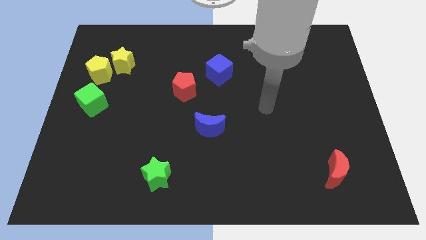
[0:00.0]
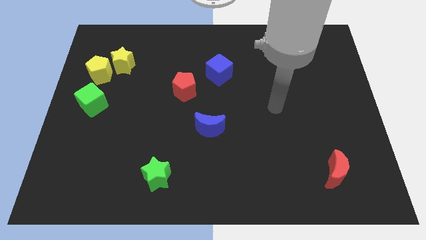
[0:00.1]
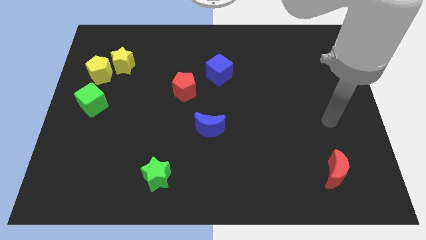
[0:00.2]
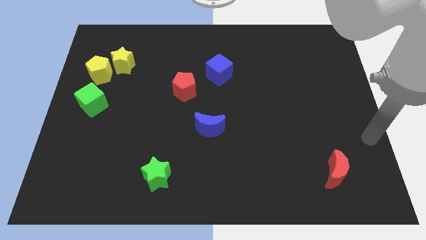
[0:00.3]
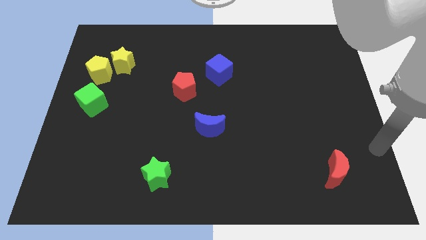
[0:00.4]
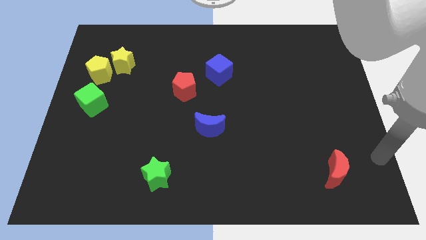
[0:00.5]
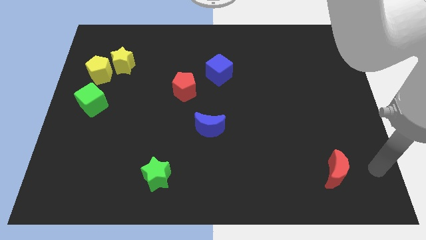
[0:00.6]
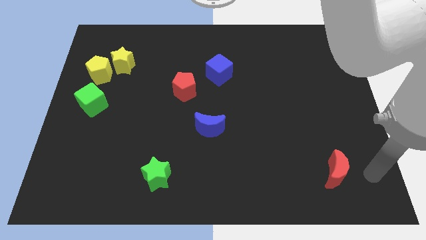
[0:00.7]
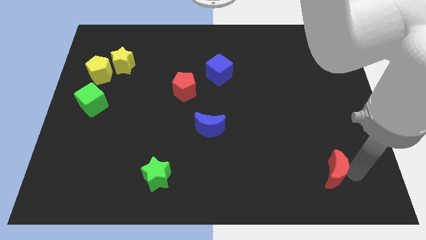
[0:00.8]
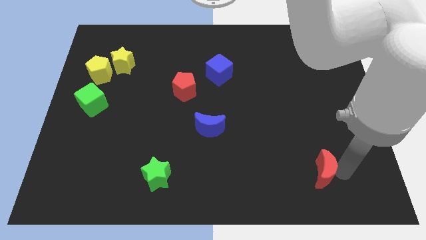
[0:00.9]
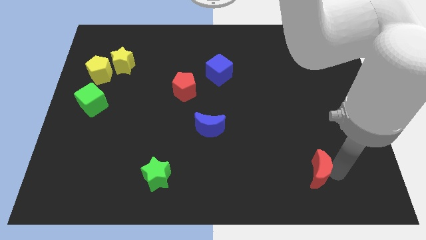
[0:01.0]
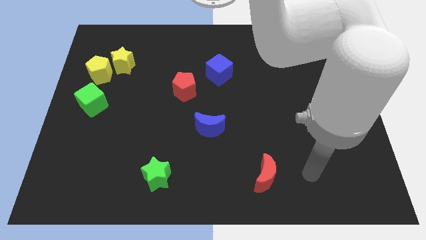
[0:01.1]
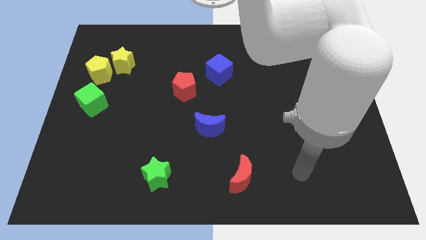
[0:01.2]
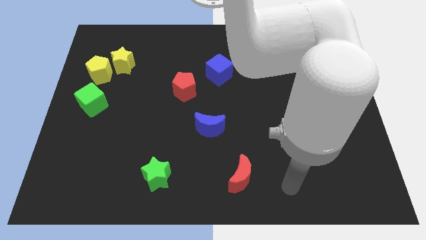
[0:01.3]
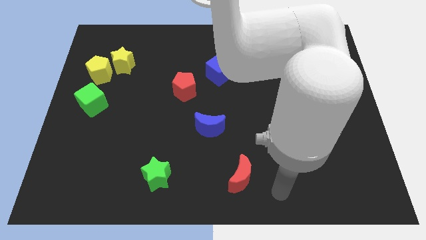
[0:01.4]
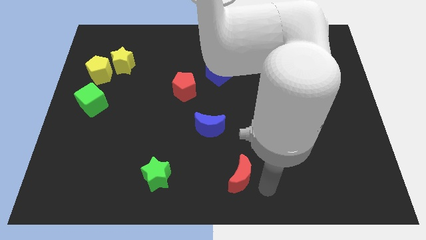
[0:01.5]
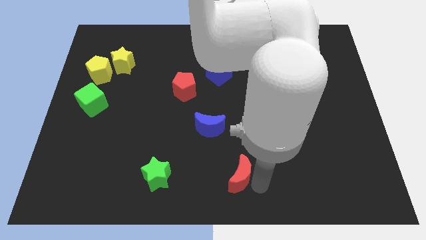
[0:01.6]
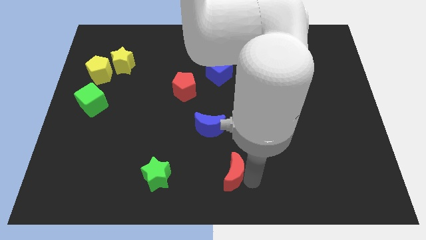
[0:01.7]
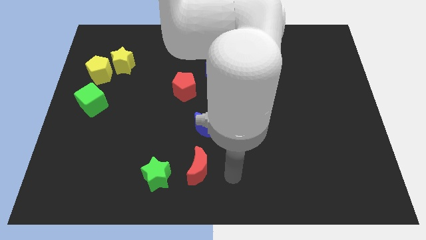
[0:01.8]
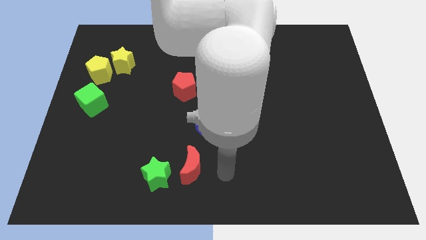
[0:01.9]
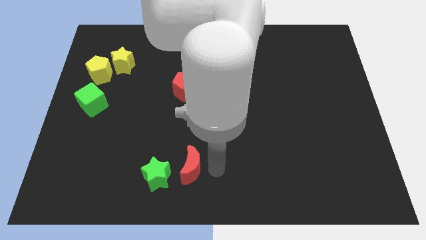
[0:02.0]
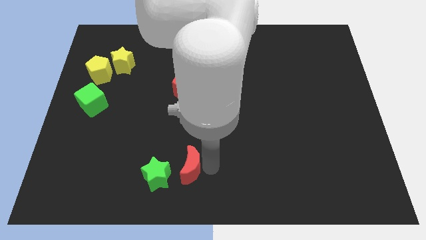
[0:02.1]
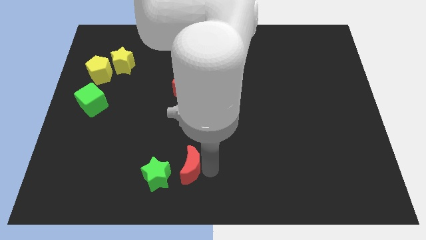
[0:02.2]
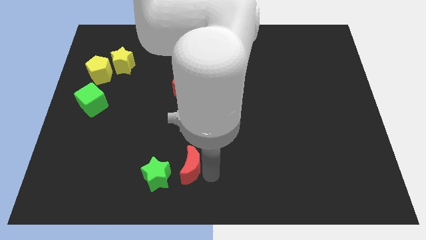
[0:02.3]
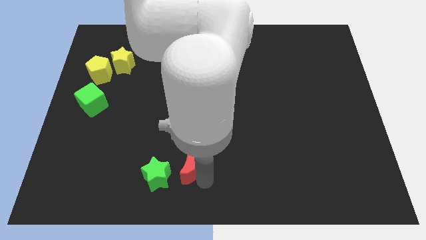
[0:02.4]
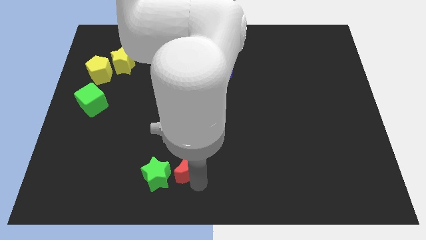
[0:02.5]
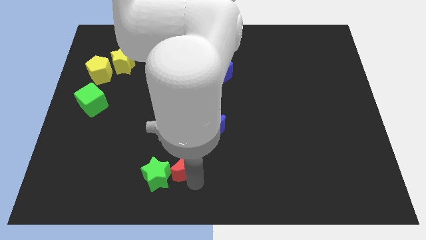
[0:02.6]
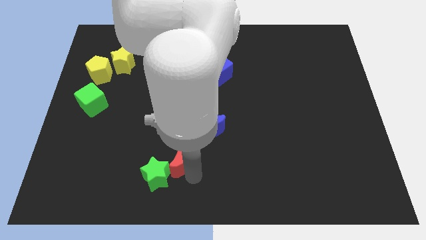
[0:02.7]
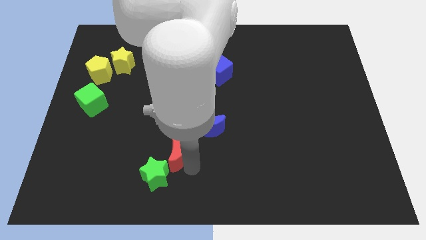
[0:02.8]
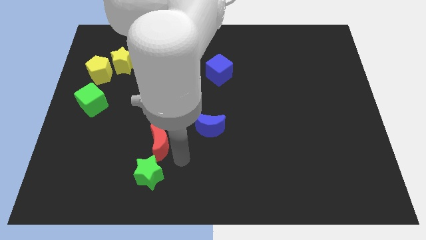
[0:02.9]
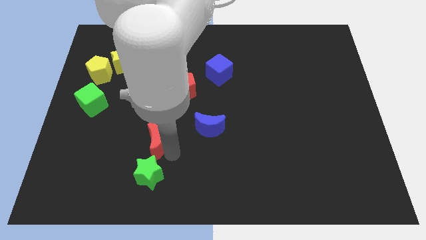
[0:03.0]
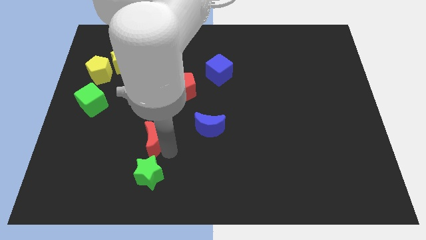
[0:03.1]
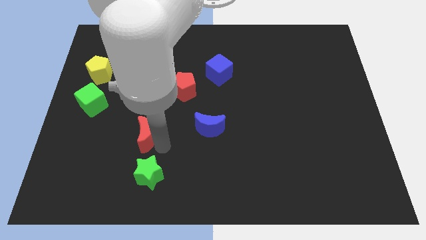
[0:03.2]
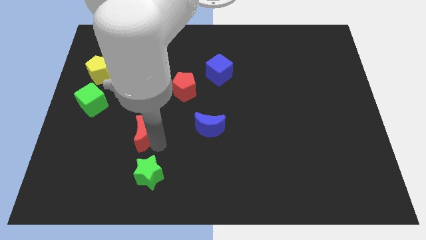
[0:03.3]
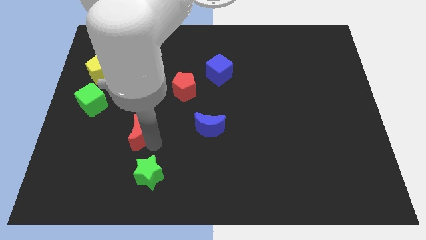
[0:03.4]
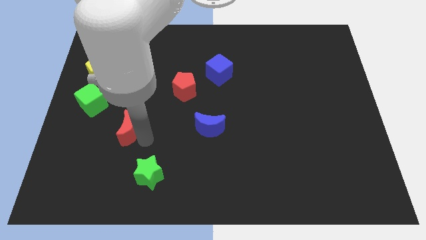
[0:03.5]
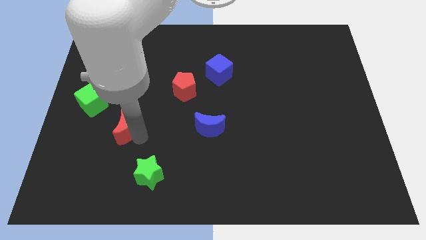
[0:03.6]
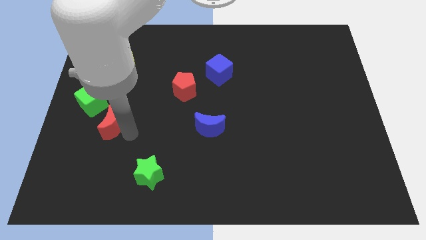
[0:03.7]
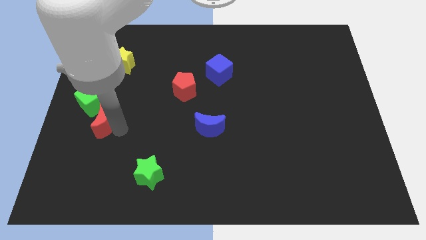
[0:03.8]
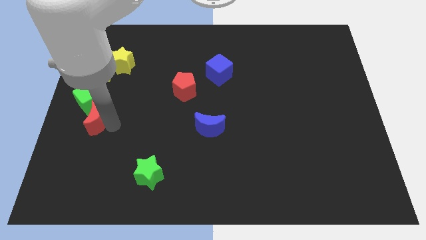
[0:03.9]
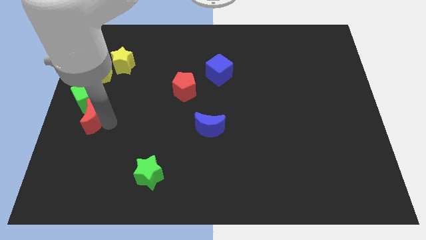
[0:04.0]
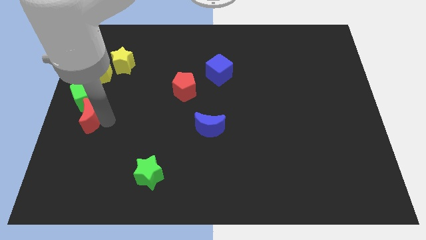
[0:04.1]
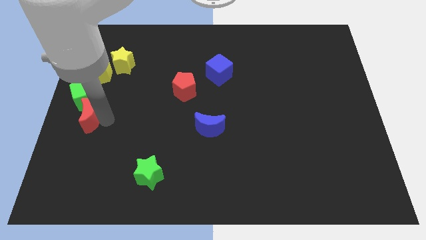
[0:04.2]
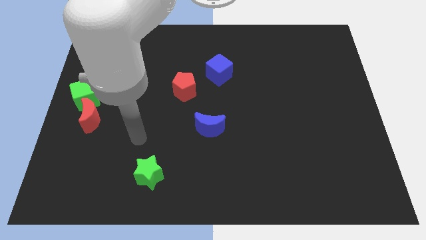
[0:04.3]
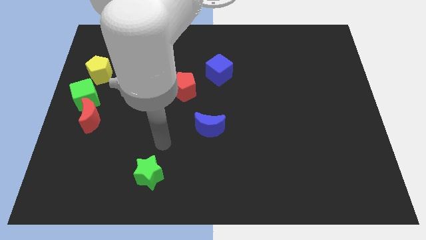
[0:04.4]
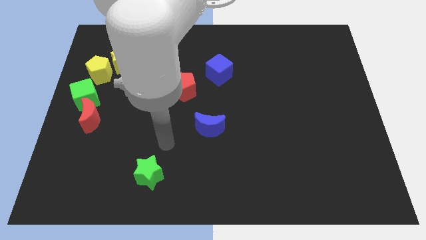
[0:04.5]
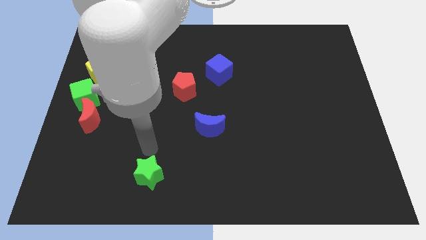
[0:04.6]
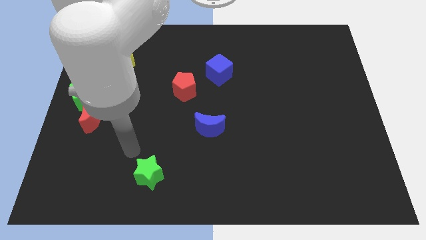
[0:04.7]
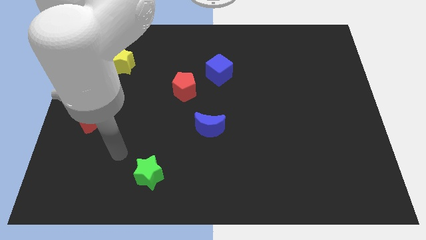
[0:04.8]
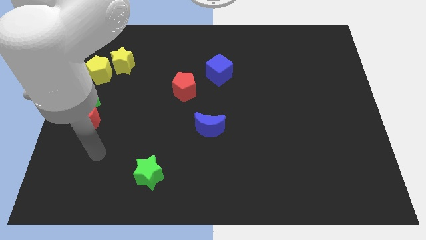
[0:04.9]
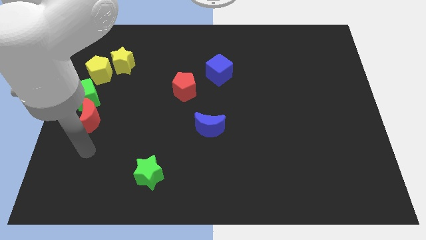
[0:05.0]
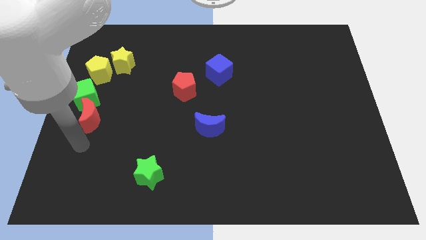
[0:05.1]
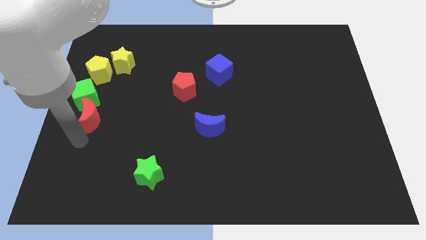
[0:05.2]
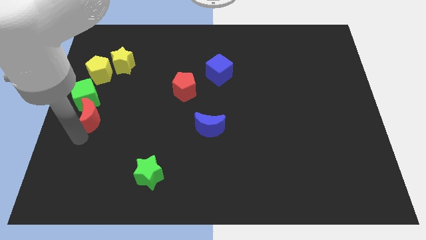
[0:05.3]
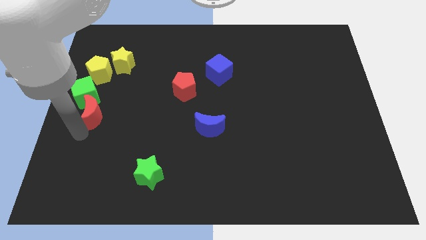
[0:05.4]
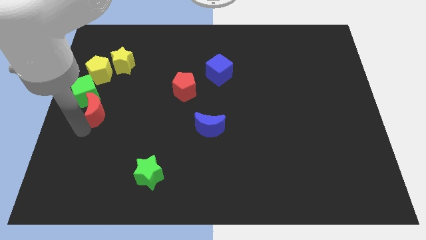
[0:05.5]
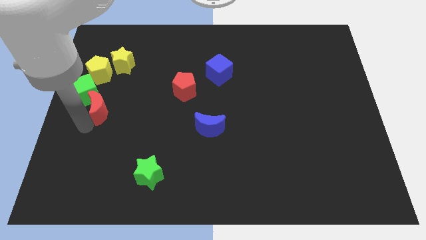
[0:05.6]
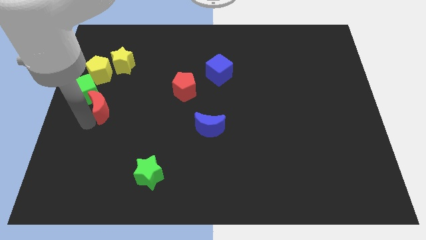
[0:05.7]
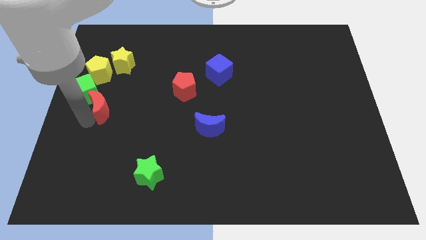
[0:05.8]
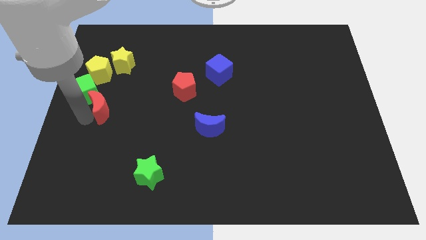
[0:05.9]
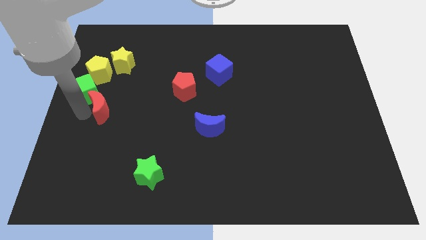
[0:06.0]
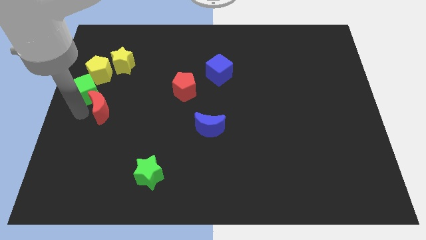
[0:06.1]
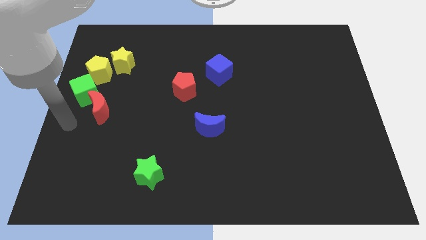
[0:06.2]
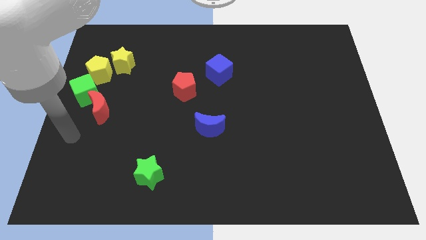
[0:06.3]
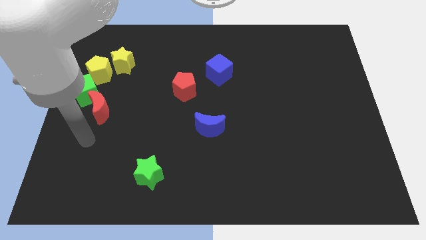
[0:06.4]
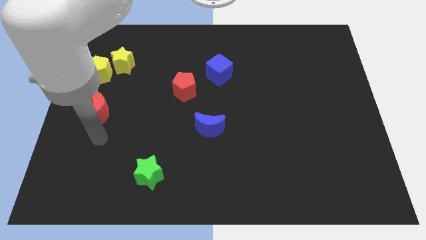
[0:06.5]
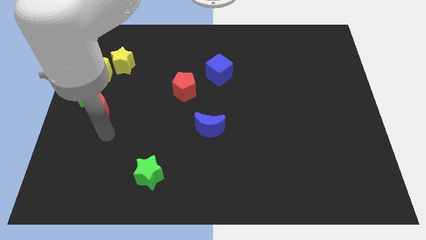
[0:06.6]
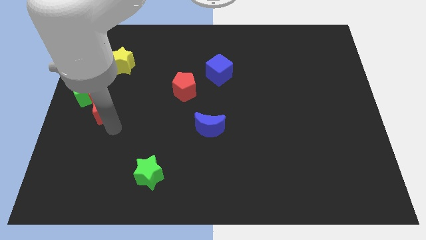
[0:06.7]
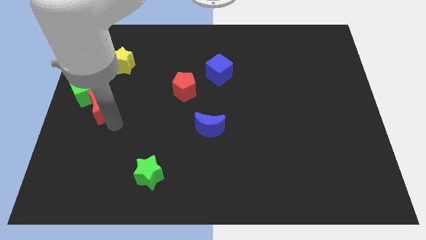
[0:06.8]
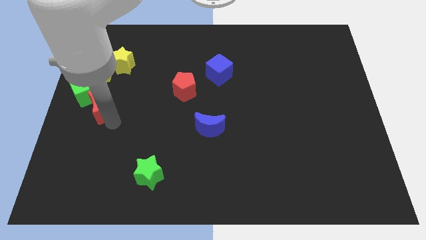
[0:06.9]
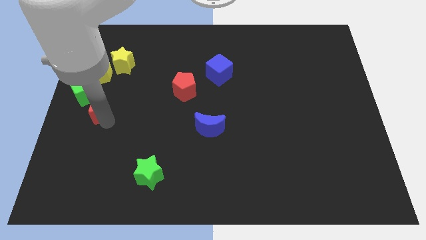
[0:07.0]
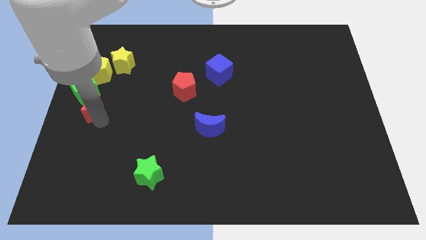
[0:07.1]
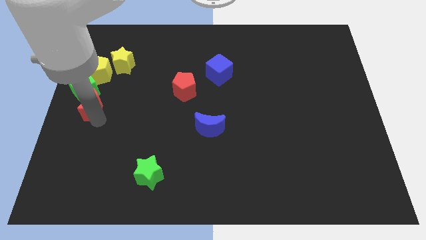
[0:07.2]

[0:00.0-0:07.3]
push the red moon to the green cube

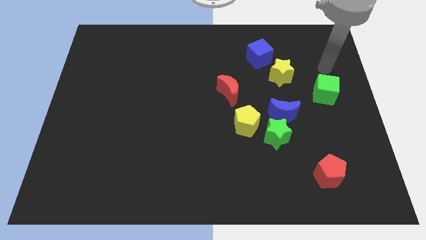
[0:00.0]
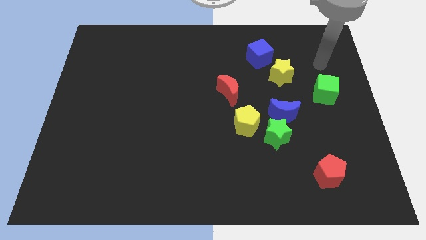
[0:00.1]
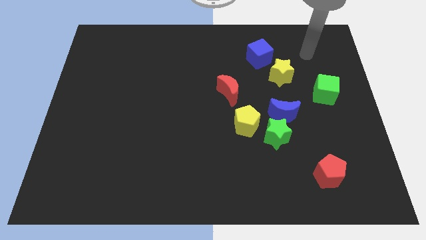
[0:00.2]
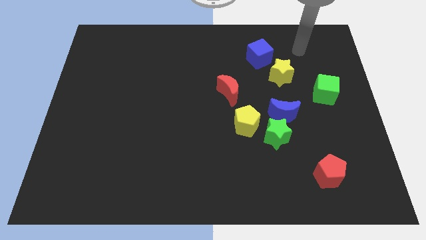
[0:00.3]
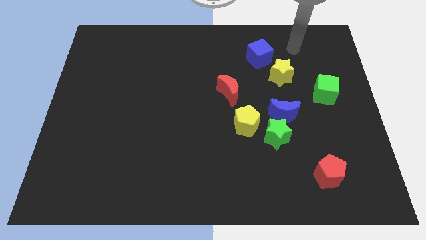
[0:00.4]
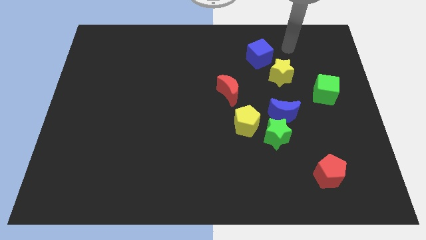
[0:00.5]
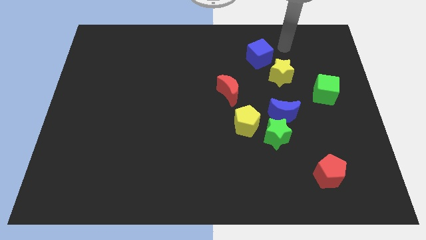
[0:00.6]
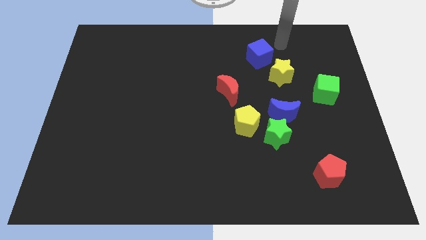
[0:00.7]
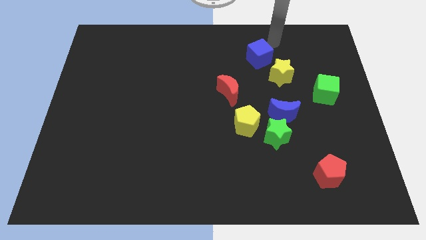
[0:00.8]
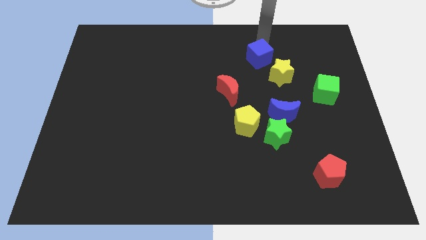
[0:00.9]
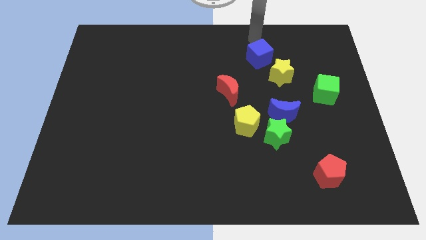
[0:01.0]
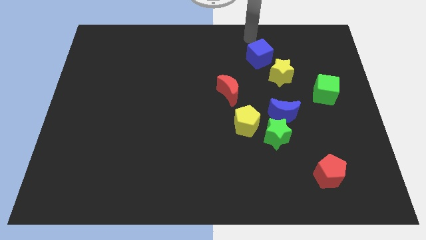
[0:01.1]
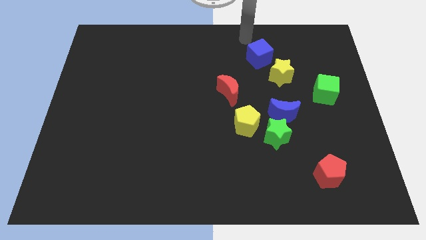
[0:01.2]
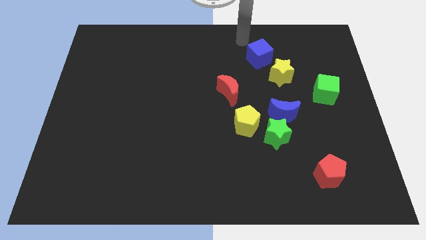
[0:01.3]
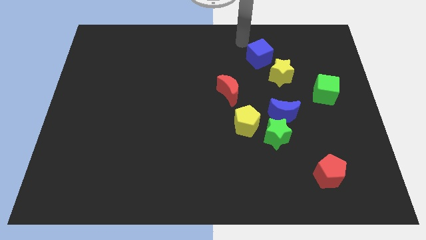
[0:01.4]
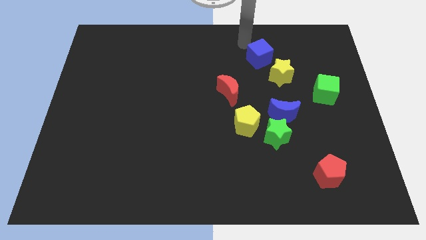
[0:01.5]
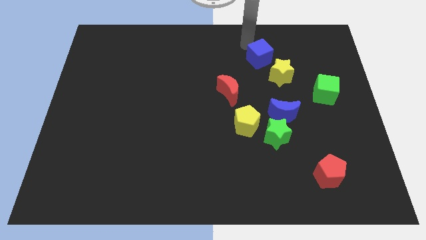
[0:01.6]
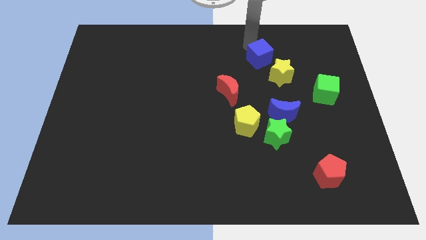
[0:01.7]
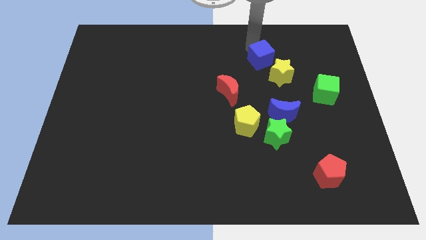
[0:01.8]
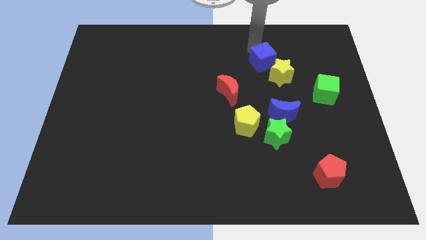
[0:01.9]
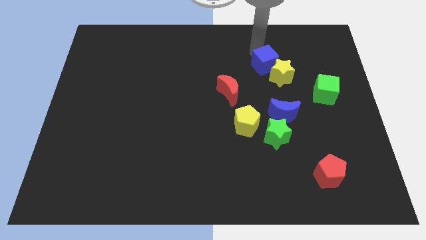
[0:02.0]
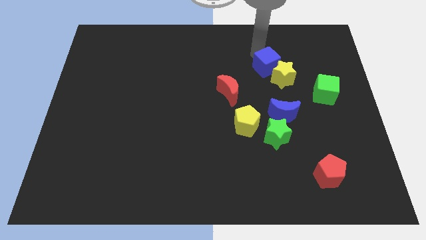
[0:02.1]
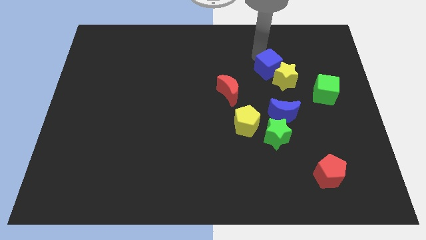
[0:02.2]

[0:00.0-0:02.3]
move the blue cube next to the yellow star
